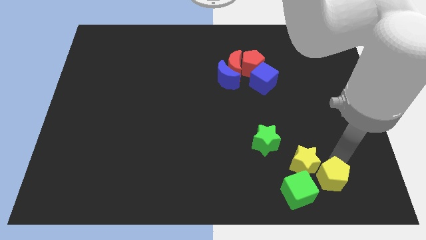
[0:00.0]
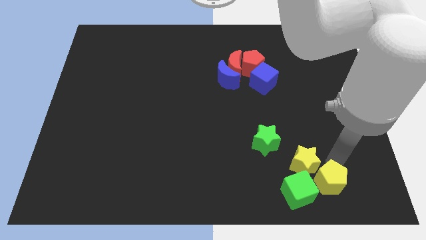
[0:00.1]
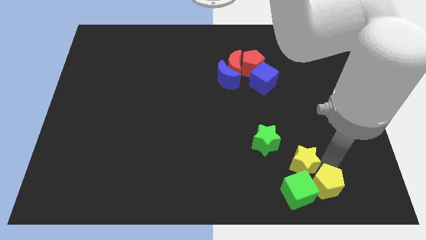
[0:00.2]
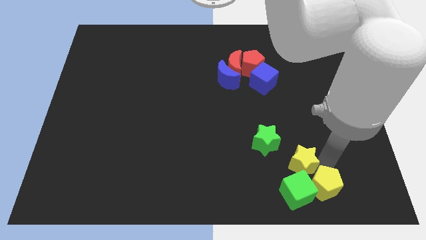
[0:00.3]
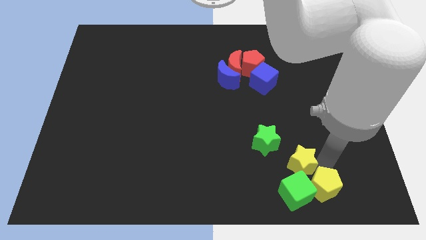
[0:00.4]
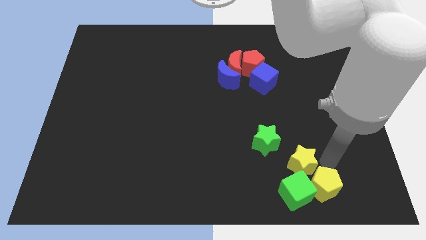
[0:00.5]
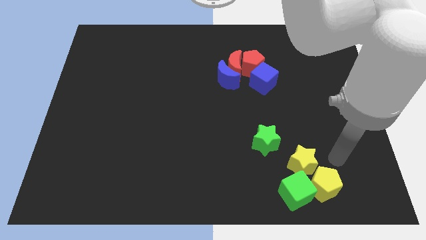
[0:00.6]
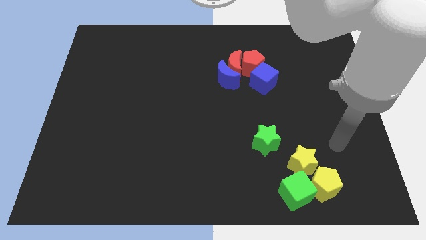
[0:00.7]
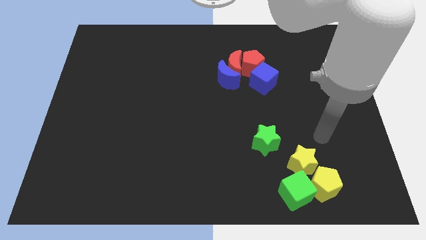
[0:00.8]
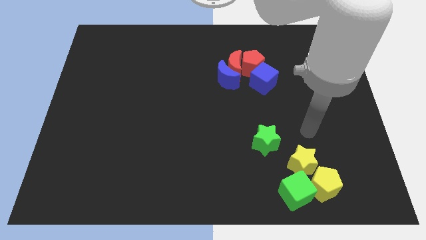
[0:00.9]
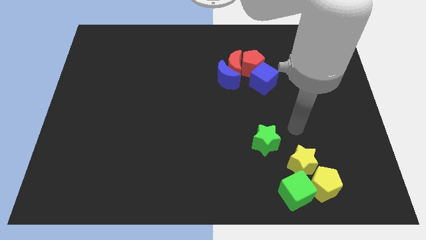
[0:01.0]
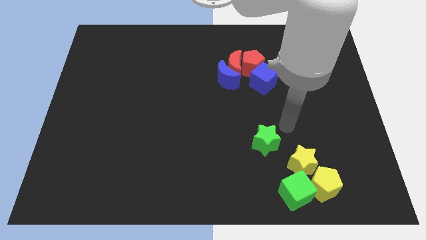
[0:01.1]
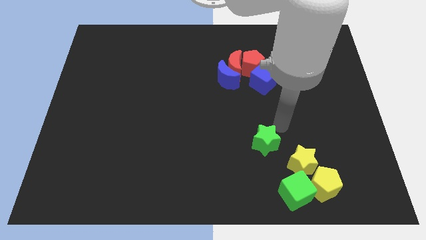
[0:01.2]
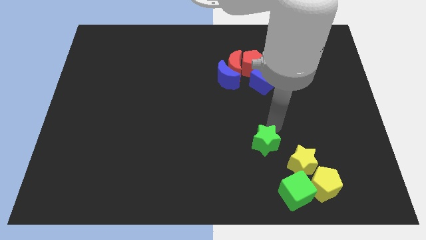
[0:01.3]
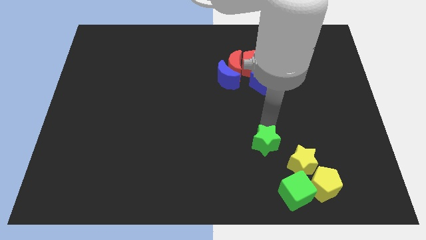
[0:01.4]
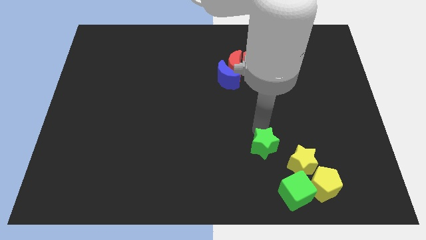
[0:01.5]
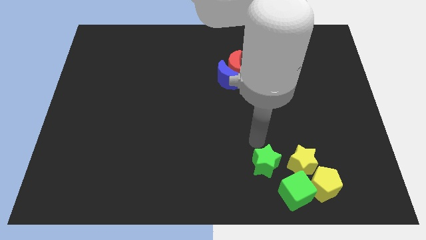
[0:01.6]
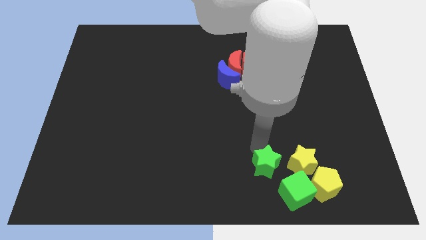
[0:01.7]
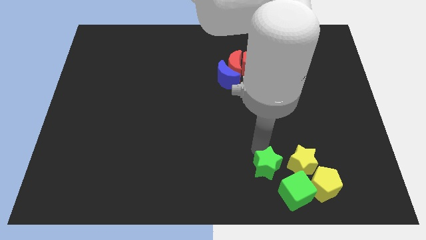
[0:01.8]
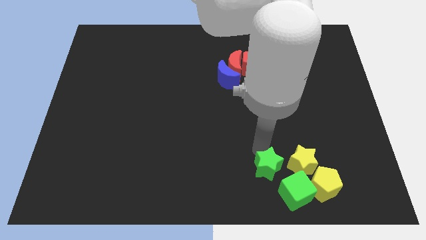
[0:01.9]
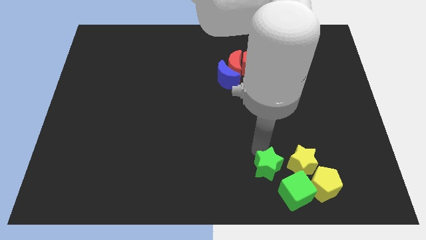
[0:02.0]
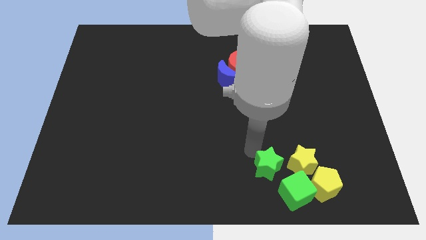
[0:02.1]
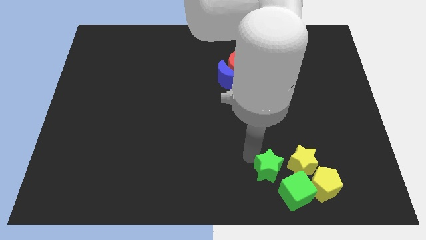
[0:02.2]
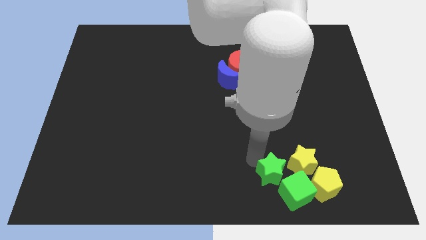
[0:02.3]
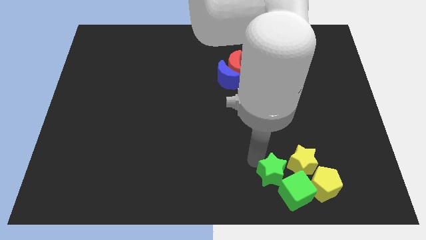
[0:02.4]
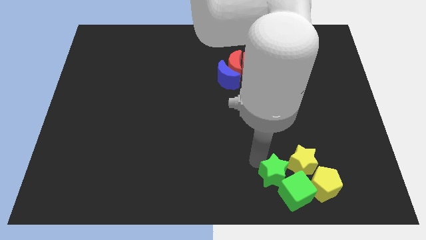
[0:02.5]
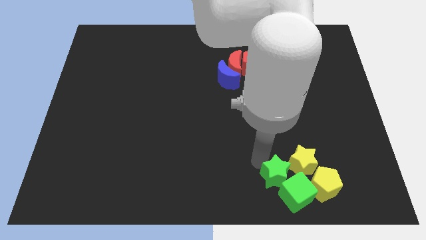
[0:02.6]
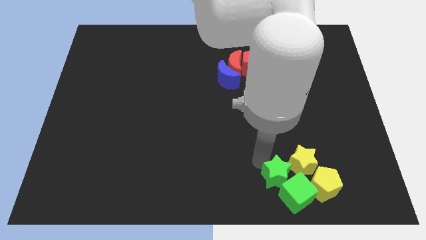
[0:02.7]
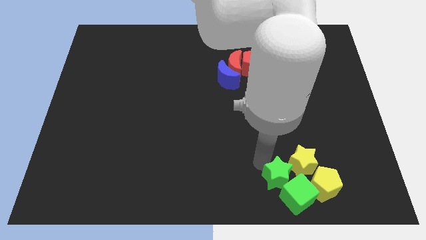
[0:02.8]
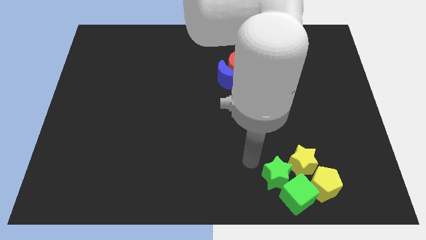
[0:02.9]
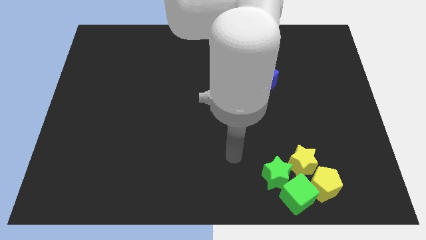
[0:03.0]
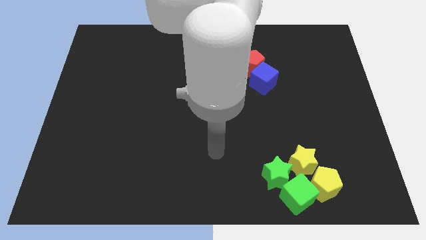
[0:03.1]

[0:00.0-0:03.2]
push yellow and green block towards the bottom to form a group

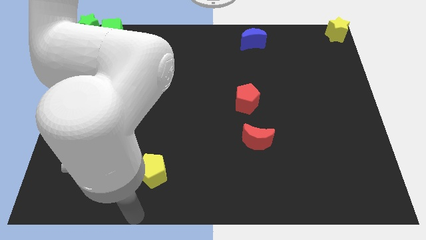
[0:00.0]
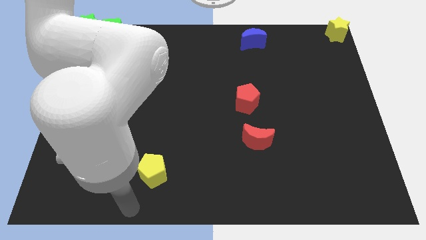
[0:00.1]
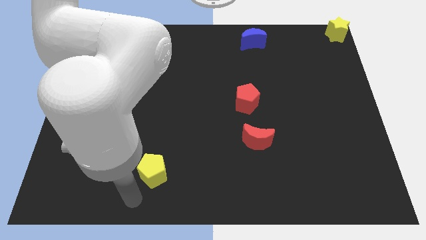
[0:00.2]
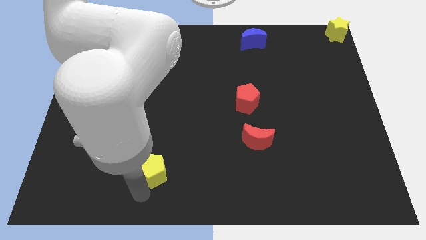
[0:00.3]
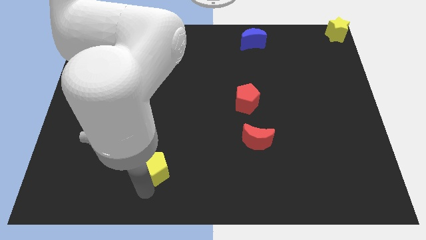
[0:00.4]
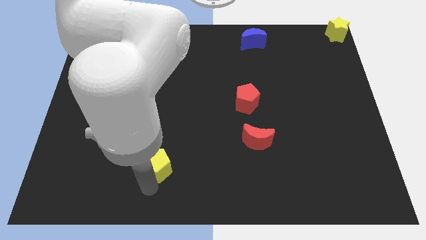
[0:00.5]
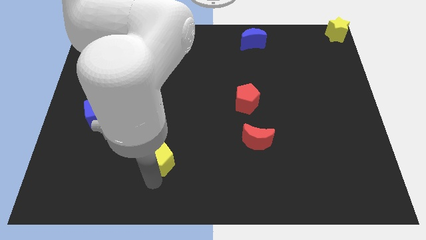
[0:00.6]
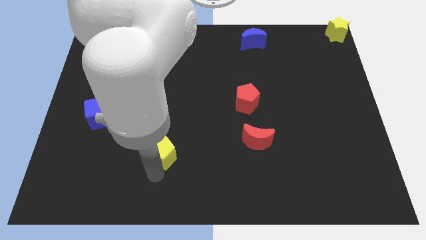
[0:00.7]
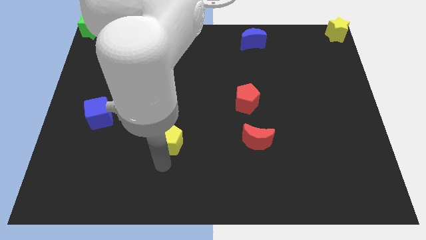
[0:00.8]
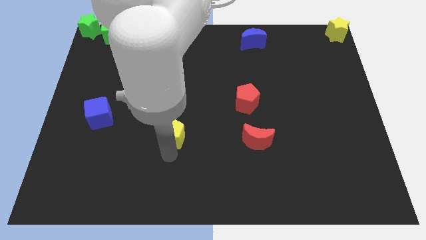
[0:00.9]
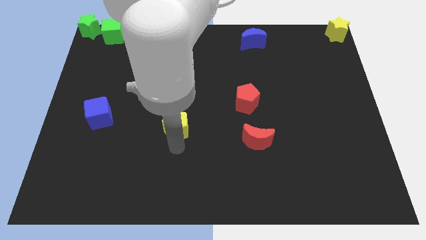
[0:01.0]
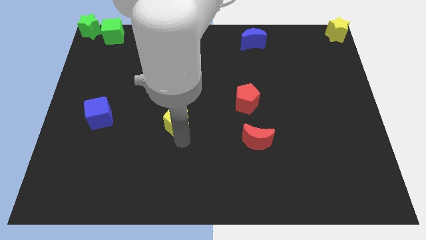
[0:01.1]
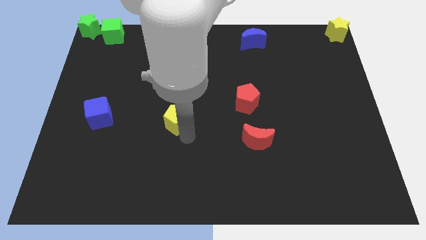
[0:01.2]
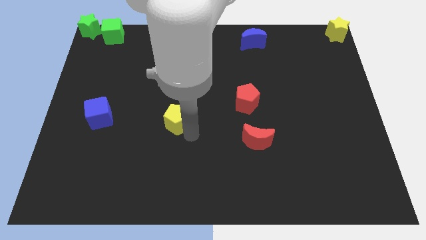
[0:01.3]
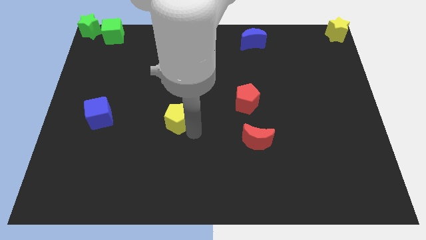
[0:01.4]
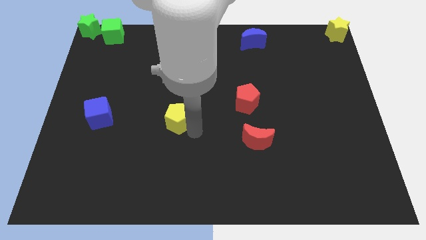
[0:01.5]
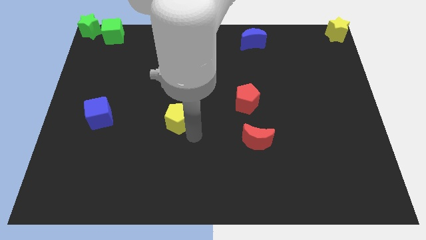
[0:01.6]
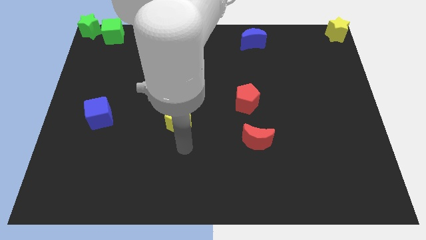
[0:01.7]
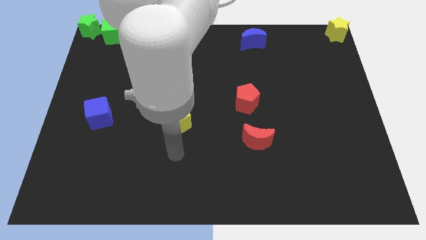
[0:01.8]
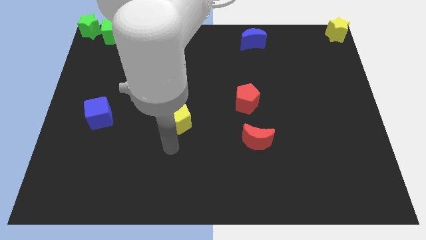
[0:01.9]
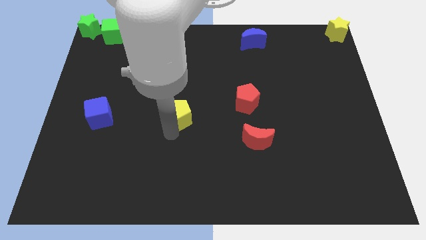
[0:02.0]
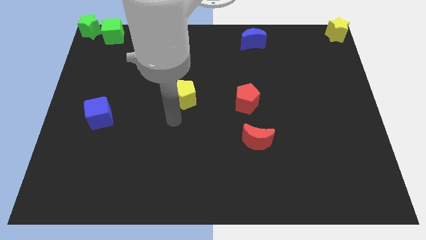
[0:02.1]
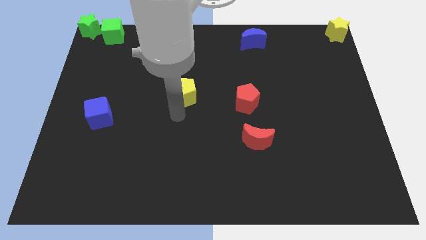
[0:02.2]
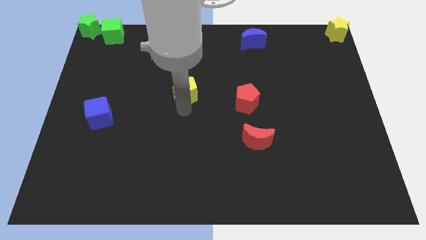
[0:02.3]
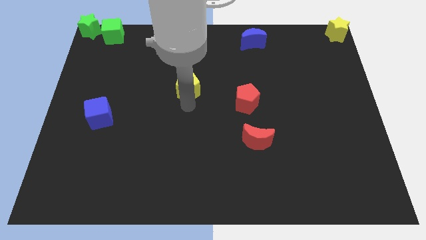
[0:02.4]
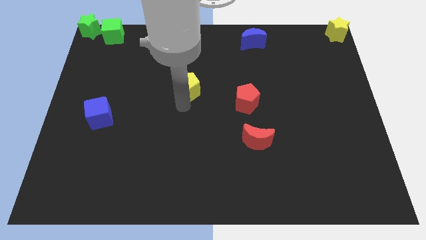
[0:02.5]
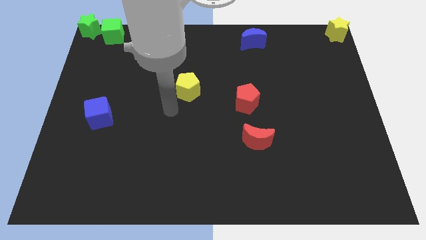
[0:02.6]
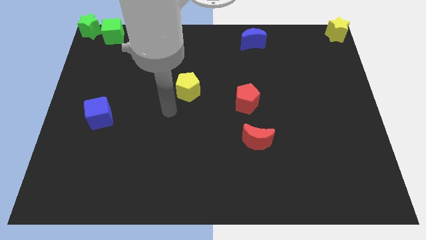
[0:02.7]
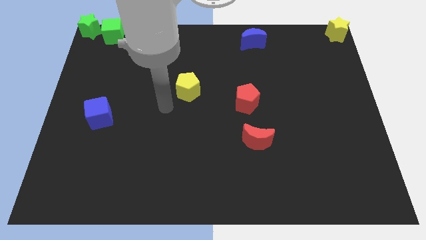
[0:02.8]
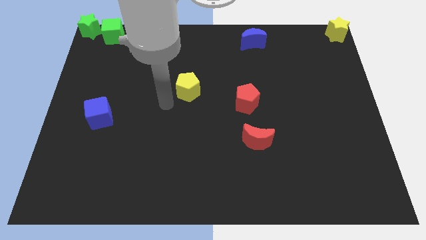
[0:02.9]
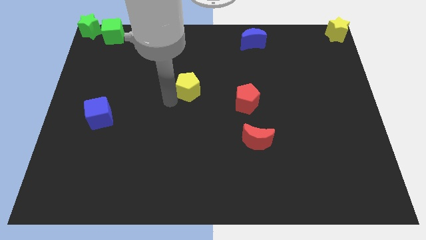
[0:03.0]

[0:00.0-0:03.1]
place the yellow pentagon to the center

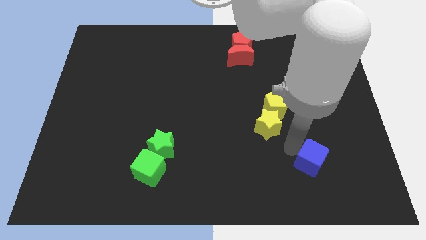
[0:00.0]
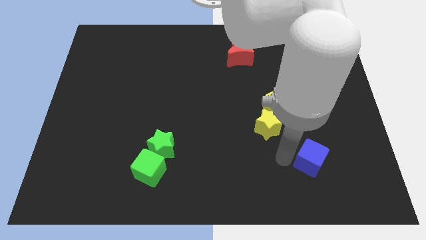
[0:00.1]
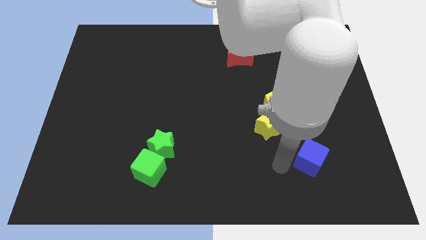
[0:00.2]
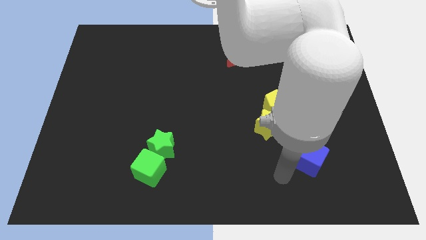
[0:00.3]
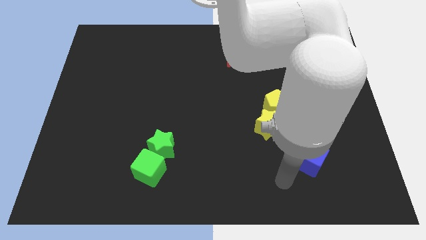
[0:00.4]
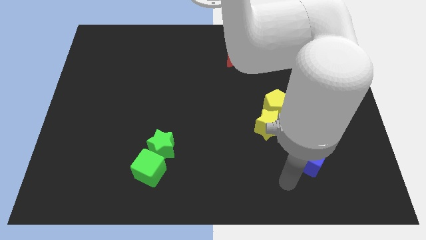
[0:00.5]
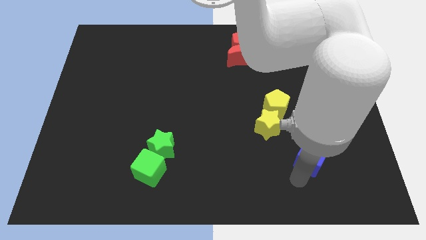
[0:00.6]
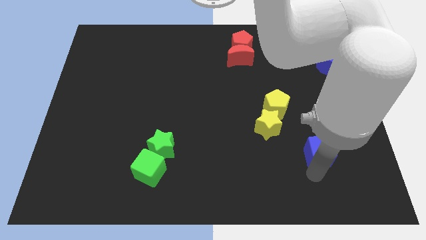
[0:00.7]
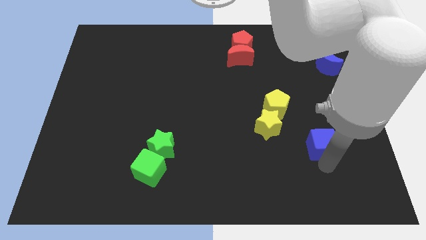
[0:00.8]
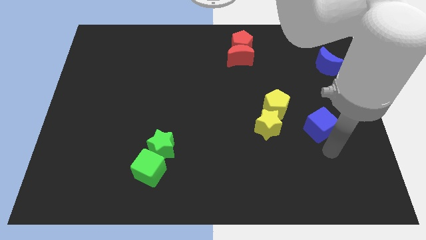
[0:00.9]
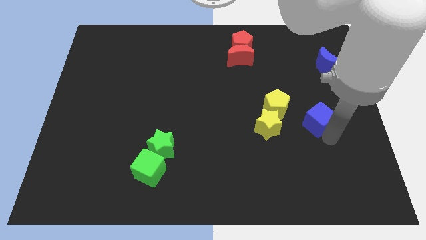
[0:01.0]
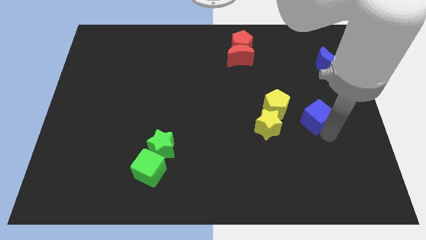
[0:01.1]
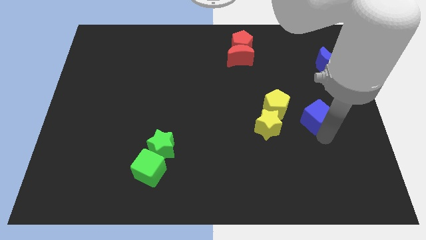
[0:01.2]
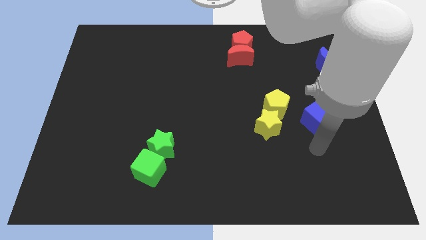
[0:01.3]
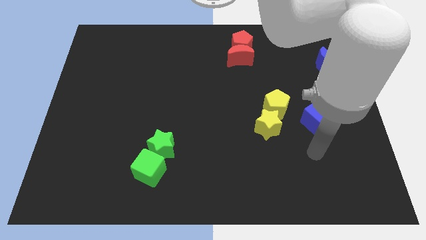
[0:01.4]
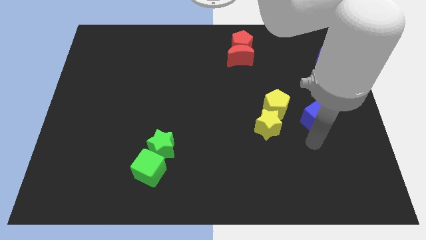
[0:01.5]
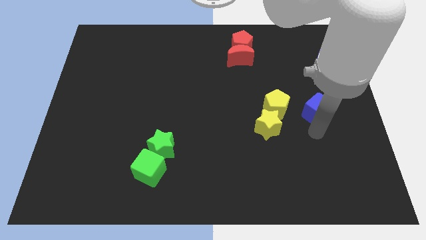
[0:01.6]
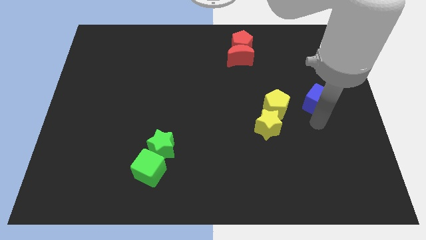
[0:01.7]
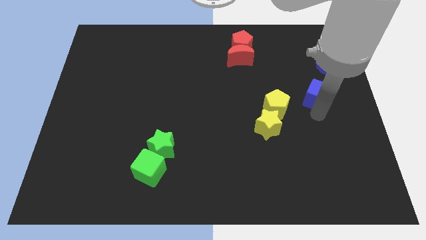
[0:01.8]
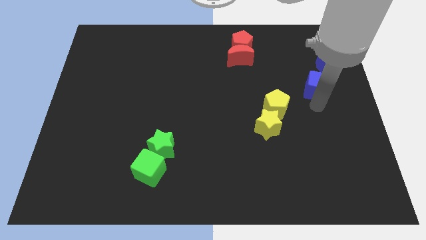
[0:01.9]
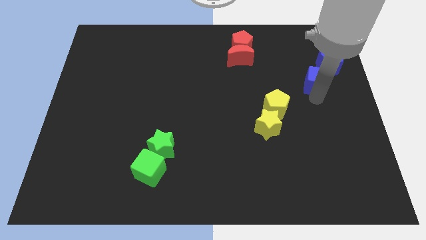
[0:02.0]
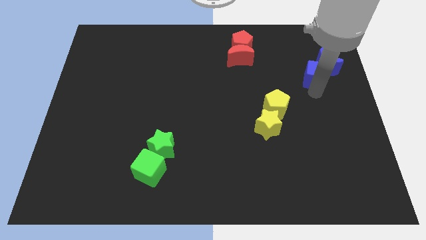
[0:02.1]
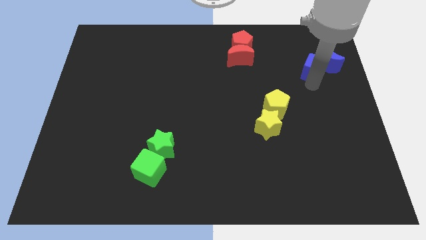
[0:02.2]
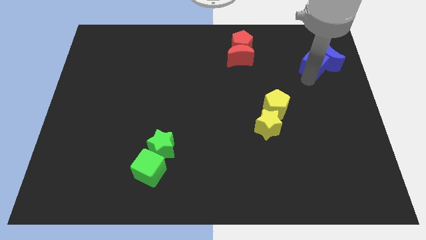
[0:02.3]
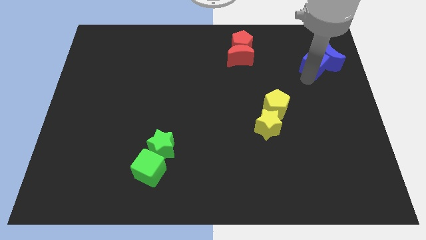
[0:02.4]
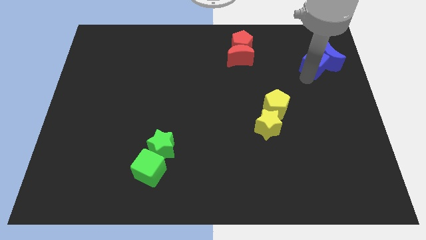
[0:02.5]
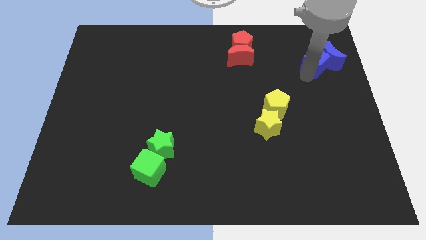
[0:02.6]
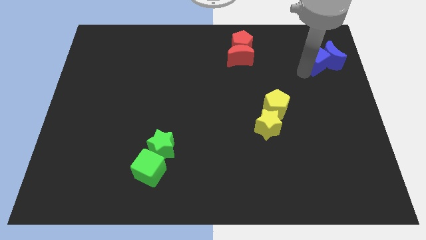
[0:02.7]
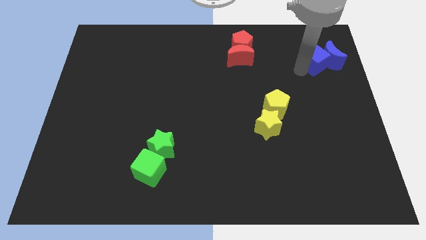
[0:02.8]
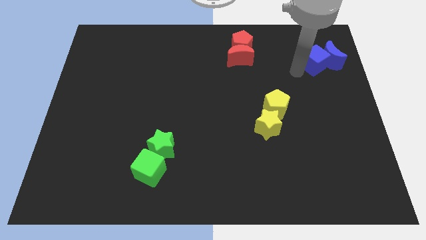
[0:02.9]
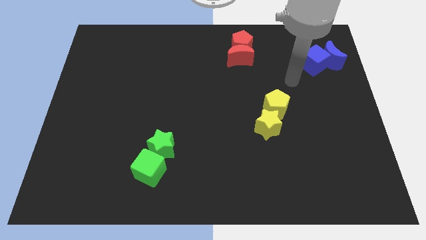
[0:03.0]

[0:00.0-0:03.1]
push blue cube towards blue moon
